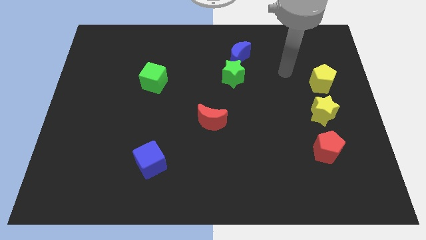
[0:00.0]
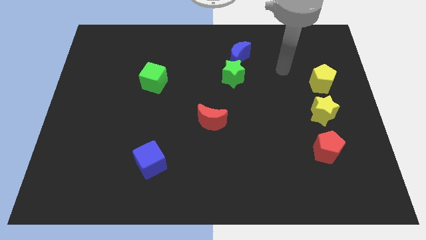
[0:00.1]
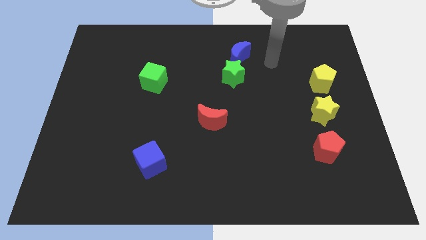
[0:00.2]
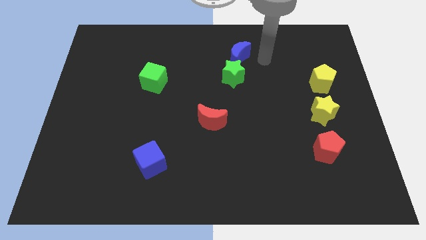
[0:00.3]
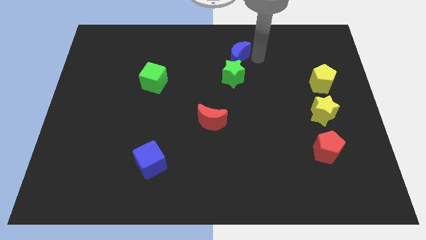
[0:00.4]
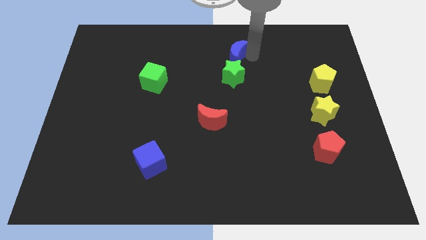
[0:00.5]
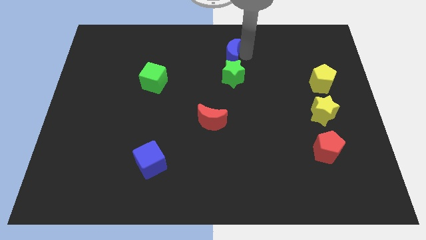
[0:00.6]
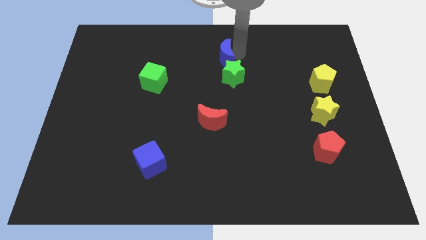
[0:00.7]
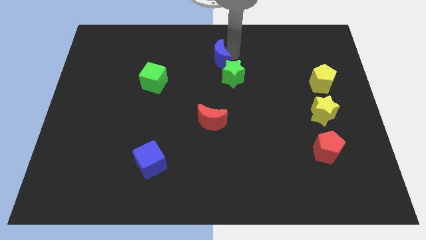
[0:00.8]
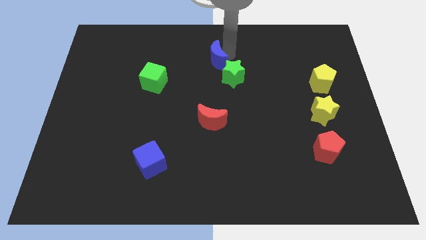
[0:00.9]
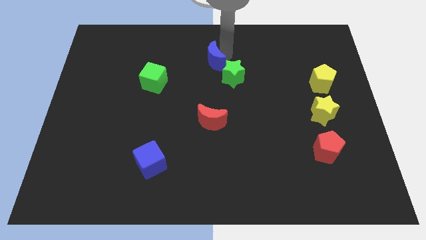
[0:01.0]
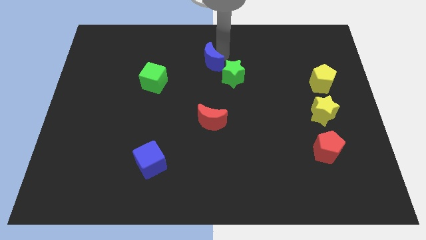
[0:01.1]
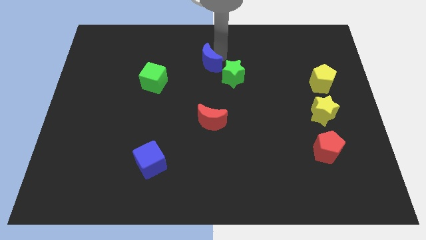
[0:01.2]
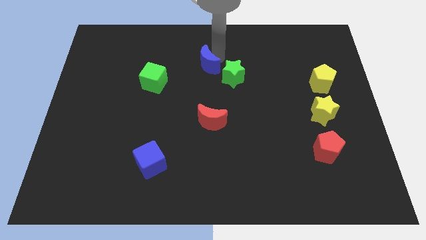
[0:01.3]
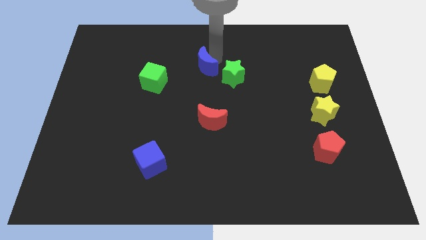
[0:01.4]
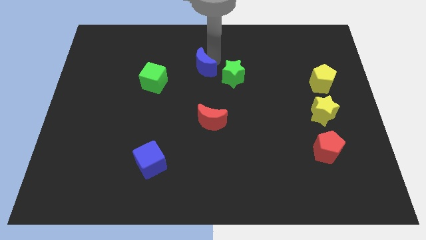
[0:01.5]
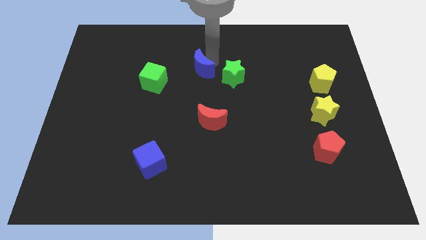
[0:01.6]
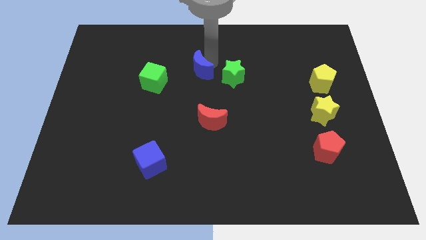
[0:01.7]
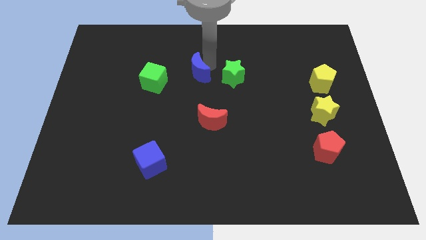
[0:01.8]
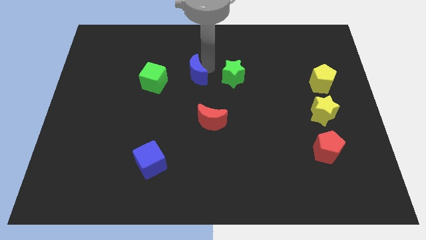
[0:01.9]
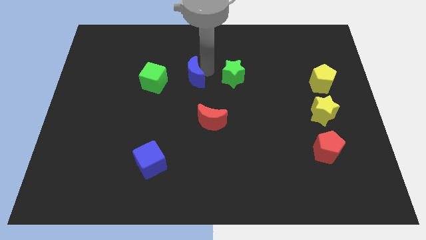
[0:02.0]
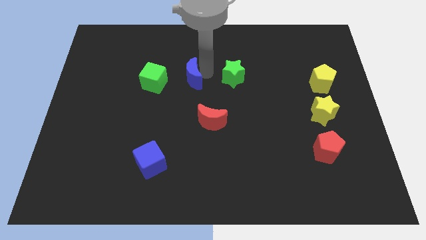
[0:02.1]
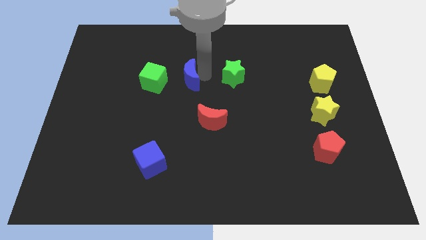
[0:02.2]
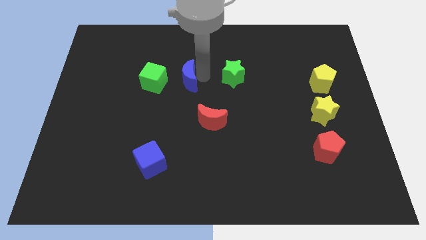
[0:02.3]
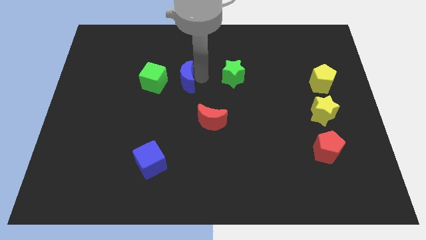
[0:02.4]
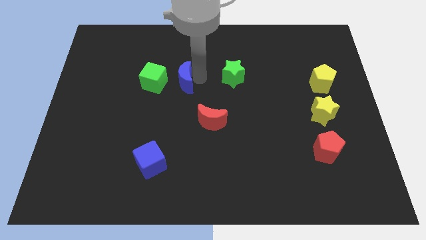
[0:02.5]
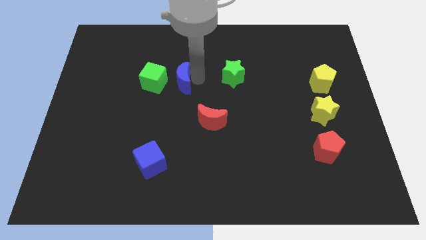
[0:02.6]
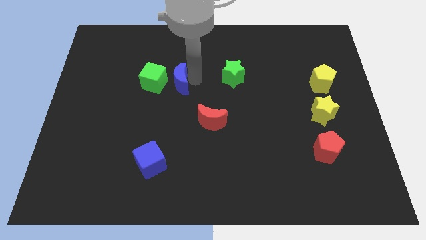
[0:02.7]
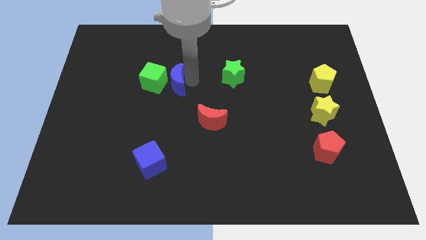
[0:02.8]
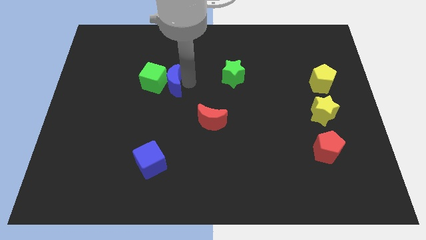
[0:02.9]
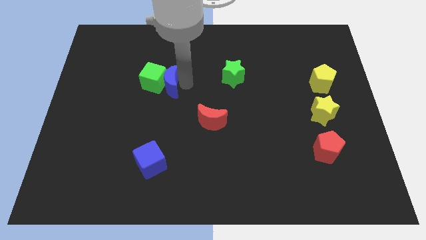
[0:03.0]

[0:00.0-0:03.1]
move the blue moon next to the green cube

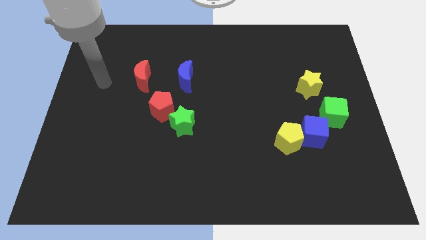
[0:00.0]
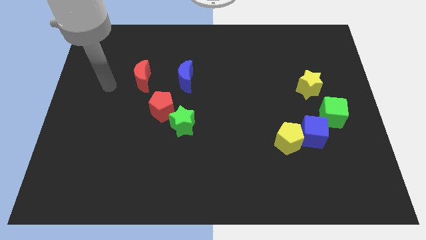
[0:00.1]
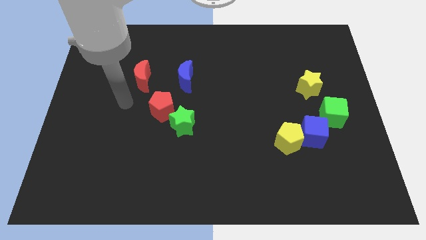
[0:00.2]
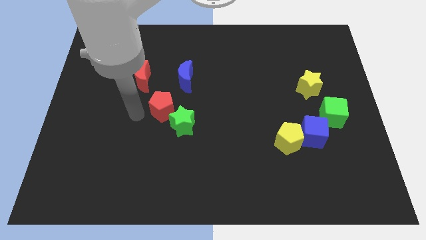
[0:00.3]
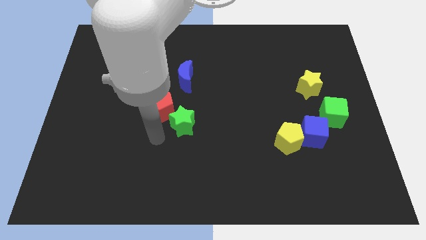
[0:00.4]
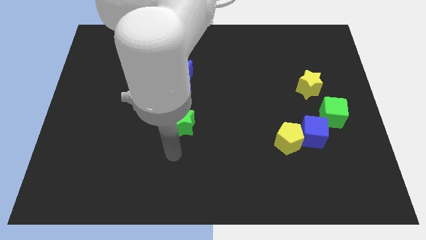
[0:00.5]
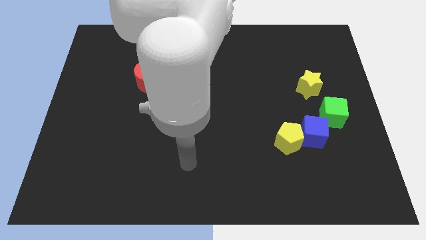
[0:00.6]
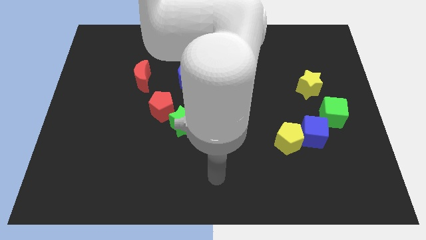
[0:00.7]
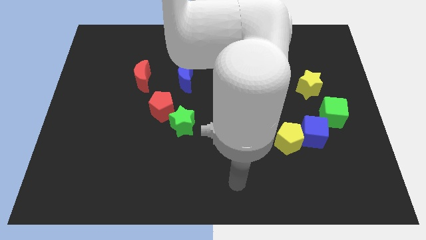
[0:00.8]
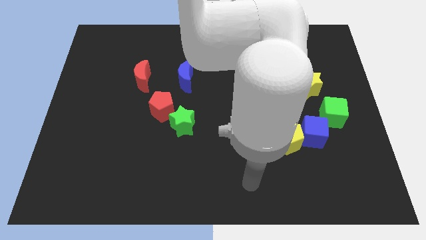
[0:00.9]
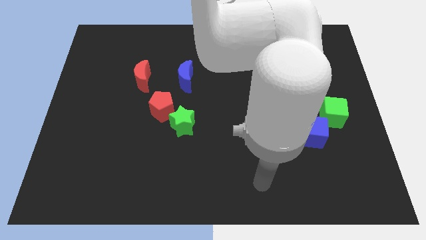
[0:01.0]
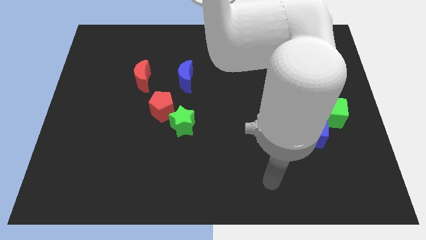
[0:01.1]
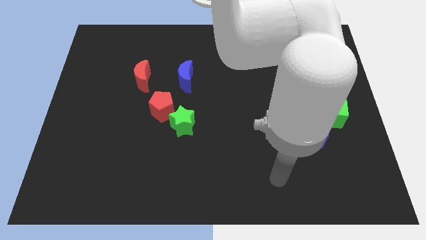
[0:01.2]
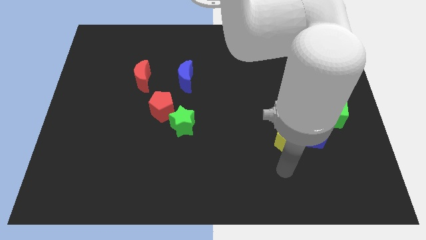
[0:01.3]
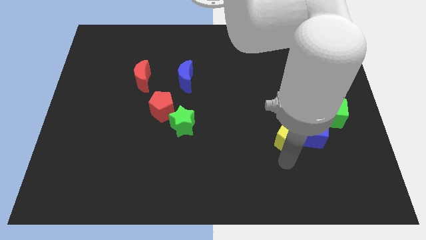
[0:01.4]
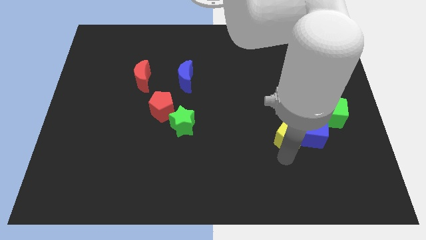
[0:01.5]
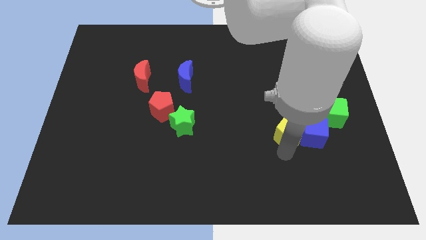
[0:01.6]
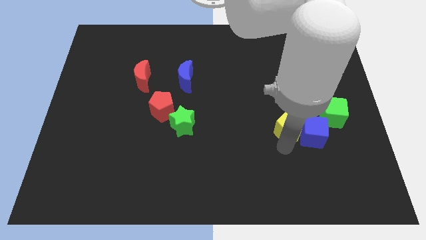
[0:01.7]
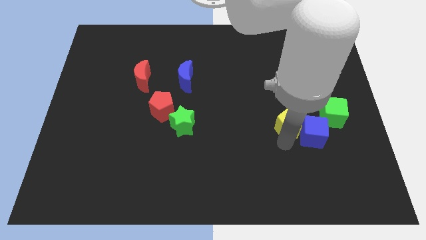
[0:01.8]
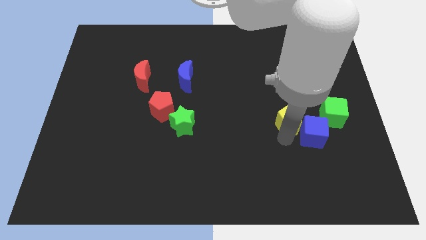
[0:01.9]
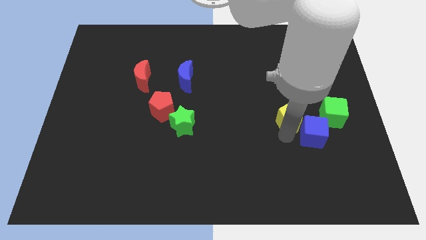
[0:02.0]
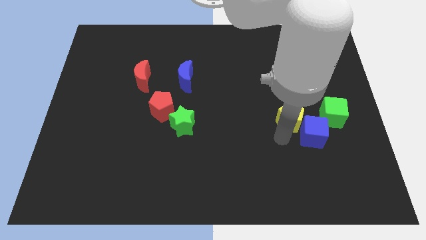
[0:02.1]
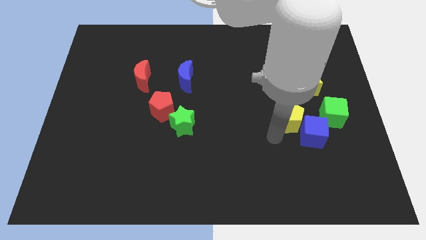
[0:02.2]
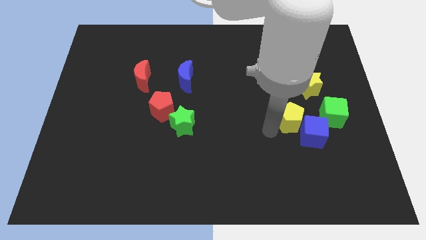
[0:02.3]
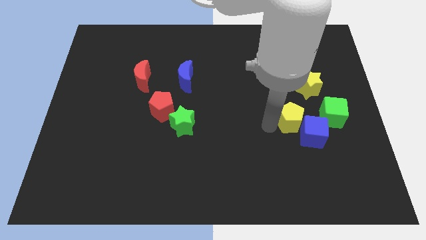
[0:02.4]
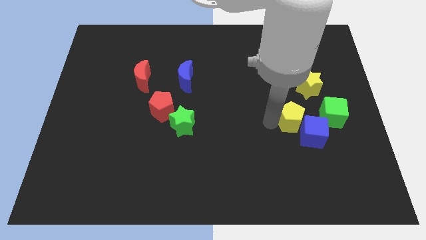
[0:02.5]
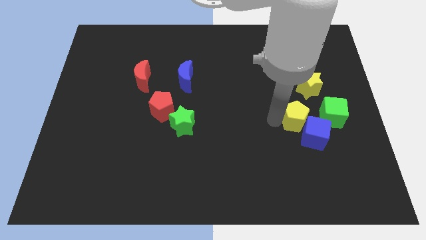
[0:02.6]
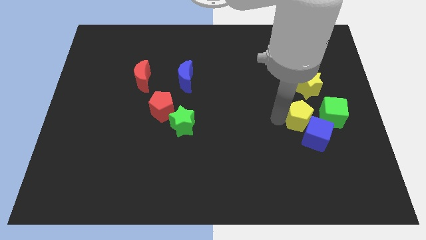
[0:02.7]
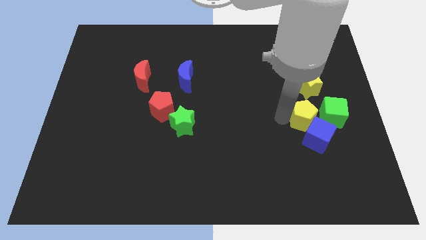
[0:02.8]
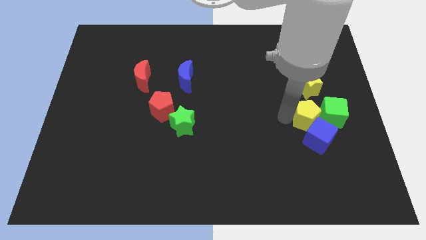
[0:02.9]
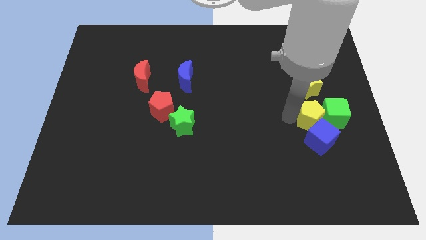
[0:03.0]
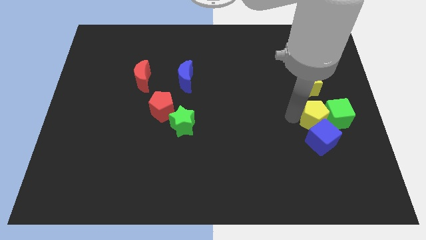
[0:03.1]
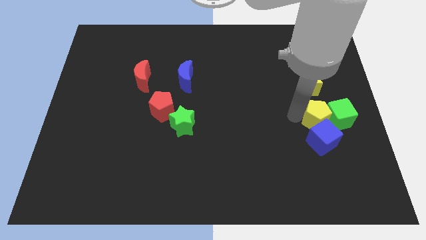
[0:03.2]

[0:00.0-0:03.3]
push the yellow pentagon close to the green cube

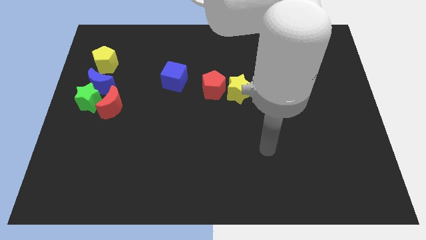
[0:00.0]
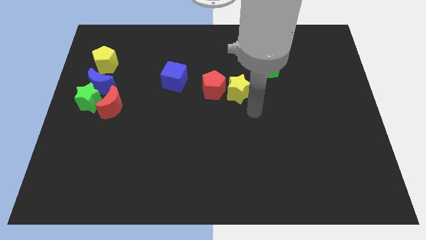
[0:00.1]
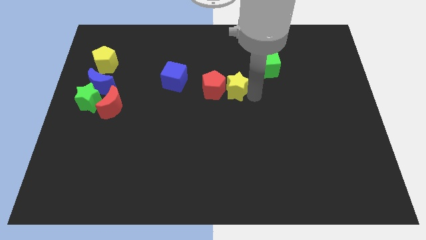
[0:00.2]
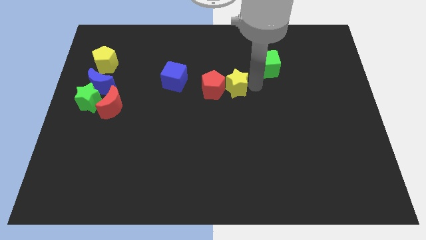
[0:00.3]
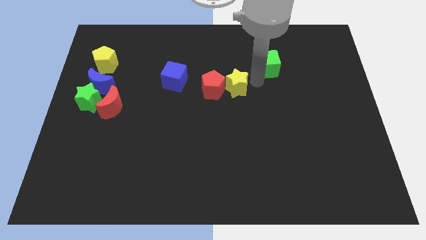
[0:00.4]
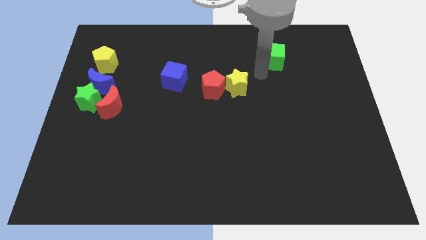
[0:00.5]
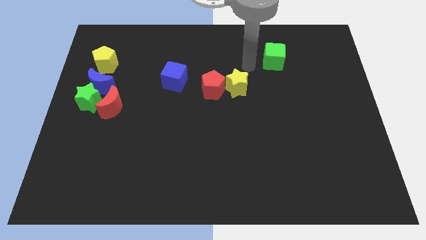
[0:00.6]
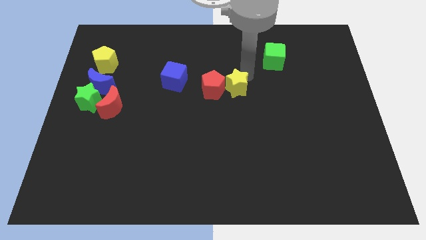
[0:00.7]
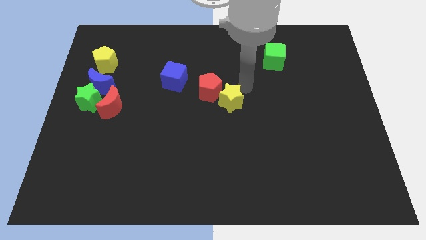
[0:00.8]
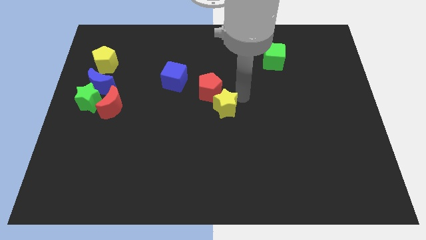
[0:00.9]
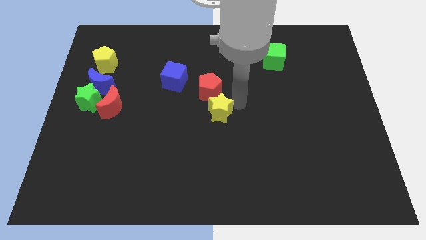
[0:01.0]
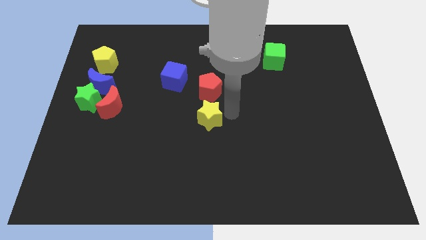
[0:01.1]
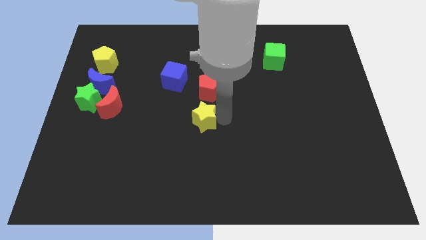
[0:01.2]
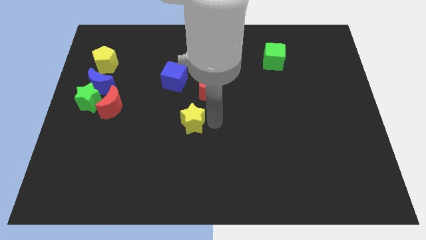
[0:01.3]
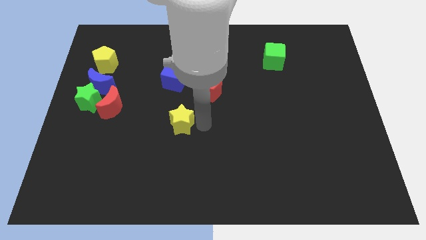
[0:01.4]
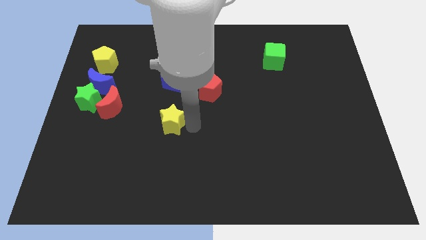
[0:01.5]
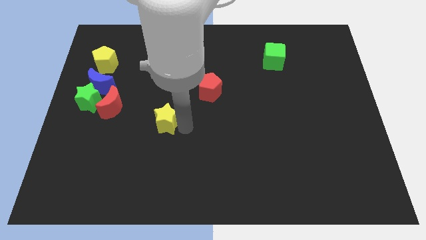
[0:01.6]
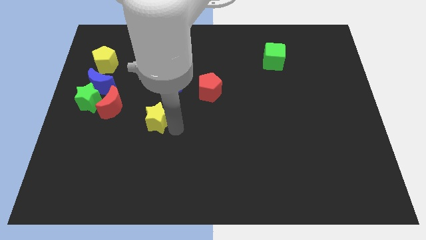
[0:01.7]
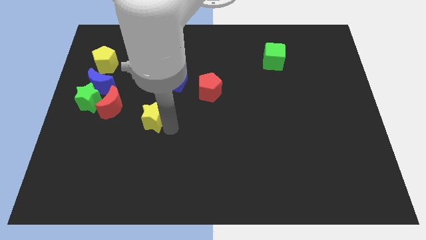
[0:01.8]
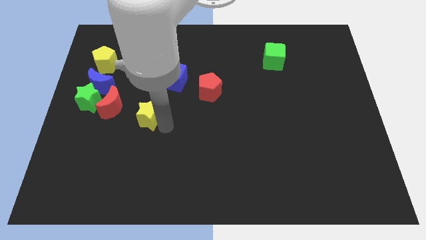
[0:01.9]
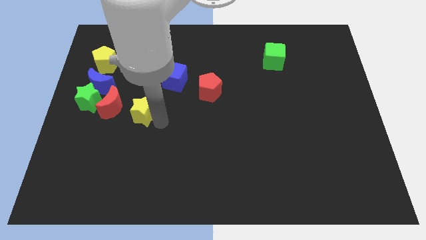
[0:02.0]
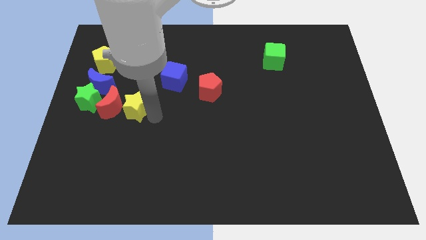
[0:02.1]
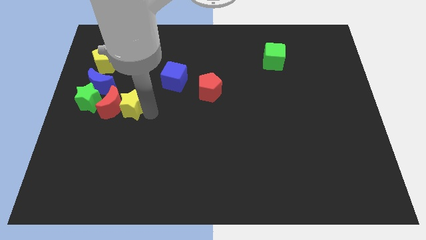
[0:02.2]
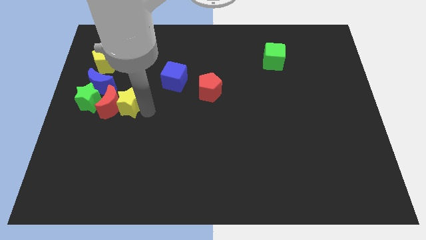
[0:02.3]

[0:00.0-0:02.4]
put the yellow star close to the red moon
